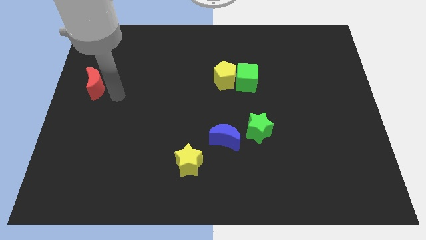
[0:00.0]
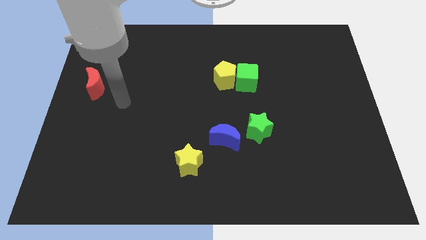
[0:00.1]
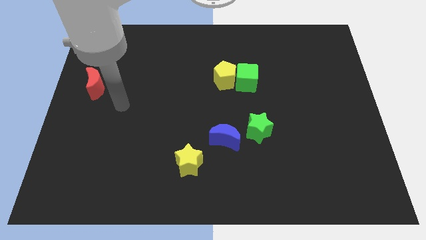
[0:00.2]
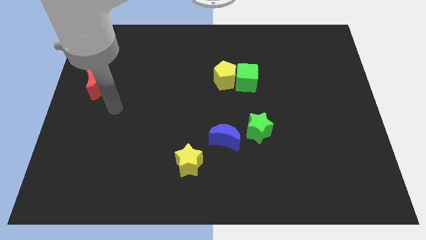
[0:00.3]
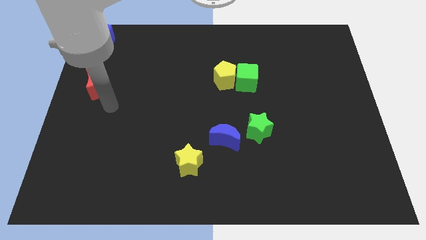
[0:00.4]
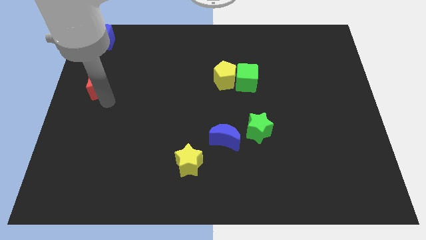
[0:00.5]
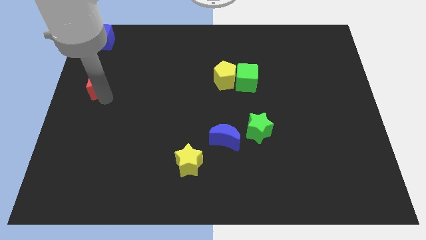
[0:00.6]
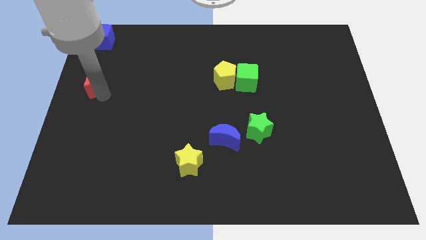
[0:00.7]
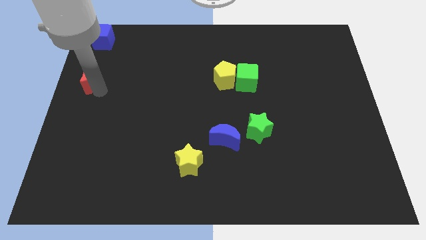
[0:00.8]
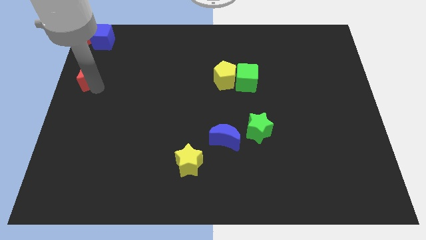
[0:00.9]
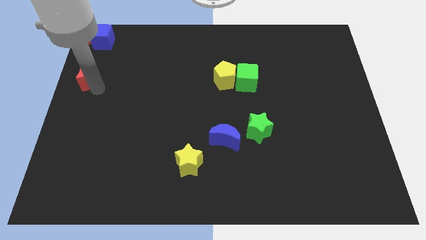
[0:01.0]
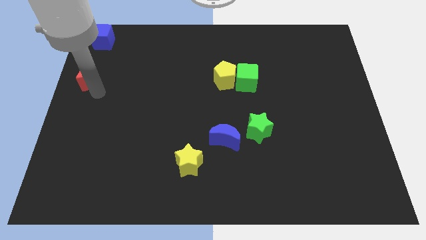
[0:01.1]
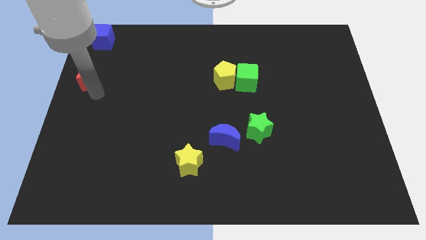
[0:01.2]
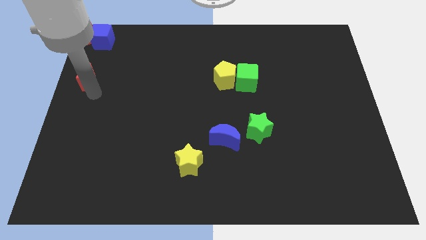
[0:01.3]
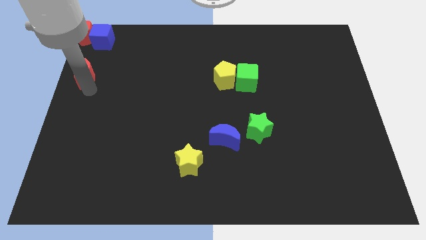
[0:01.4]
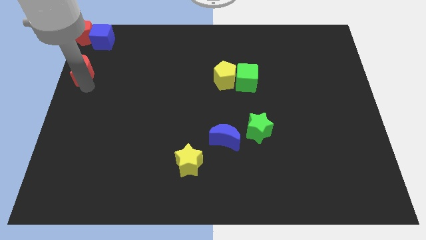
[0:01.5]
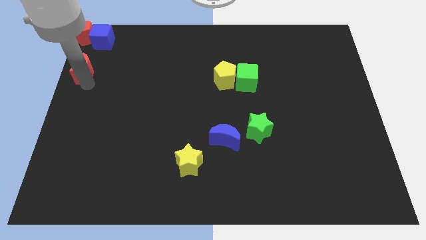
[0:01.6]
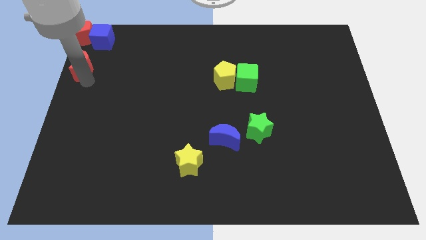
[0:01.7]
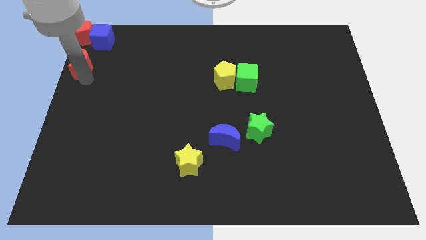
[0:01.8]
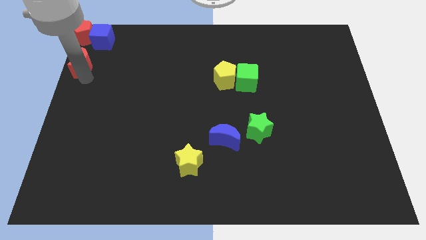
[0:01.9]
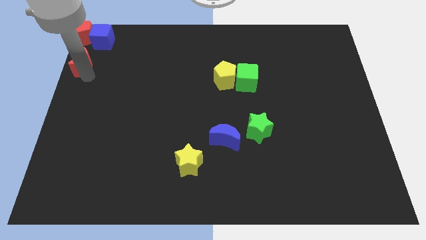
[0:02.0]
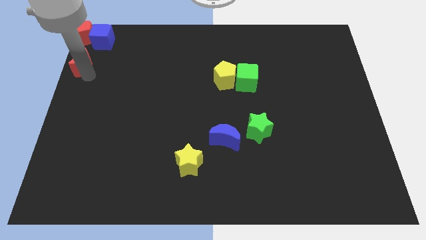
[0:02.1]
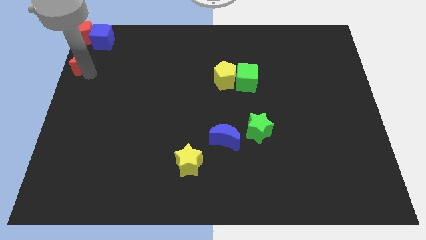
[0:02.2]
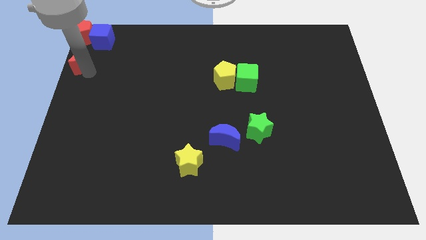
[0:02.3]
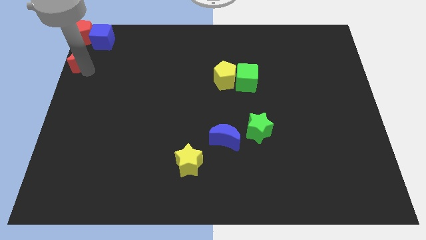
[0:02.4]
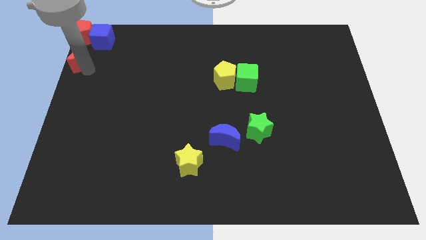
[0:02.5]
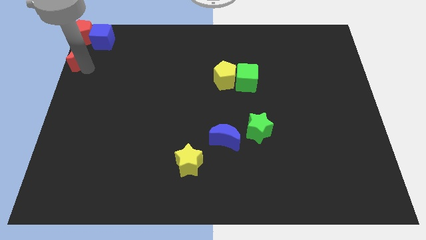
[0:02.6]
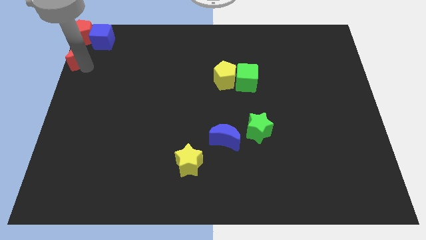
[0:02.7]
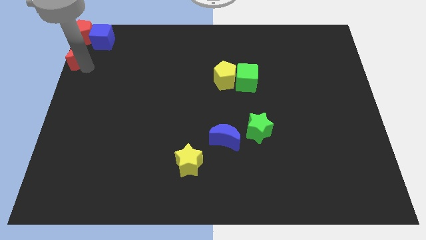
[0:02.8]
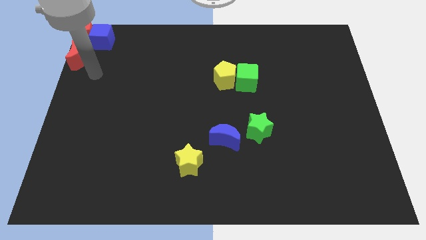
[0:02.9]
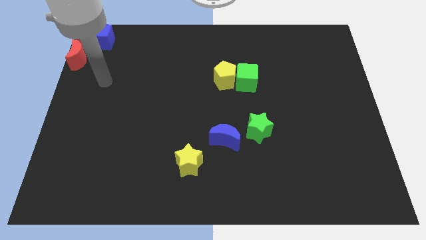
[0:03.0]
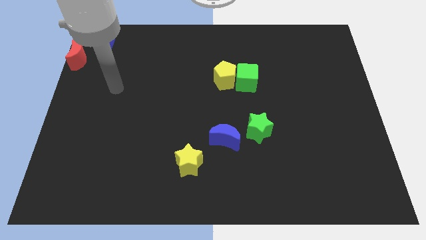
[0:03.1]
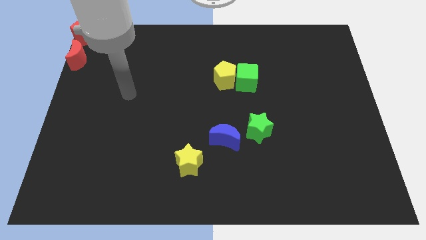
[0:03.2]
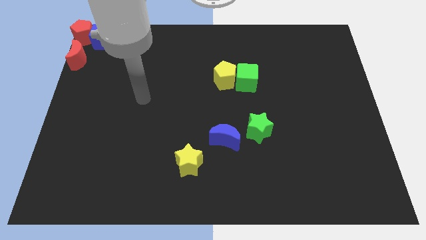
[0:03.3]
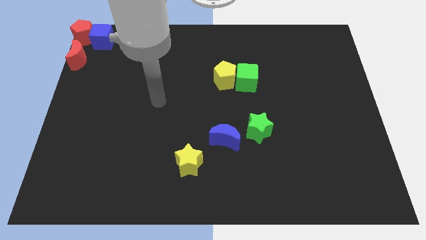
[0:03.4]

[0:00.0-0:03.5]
move the red moon below the red pentagon

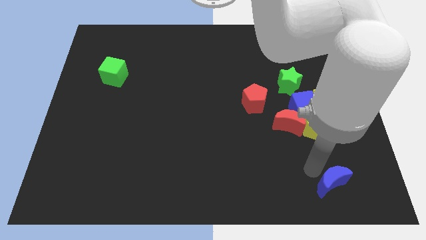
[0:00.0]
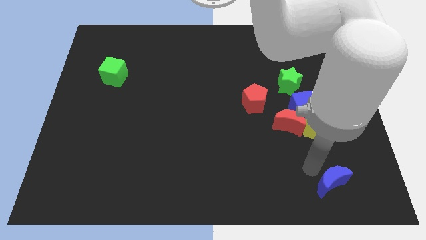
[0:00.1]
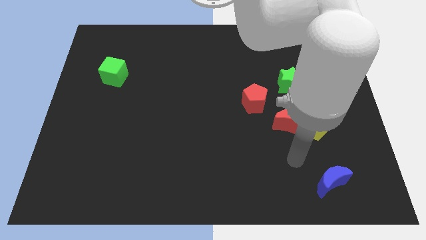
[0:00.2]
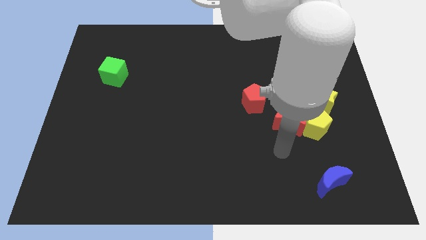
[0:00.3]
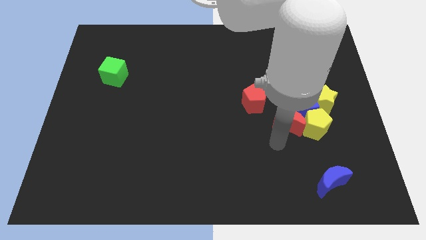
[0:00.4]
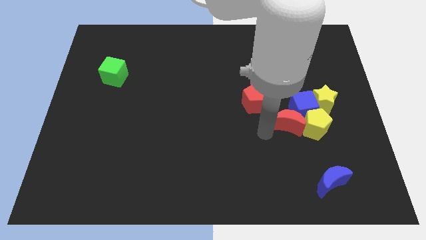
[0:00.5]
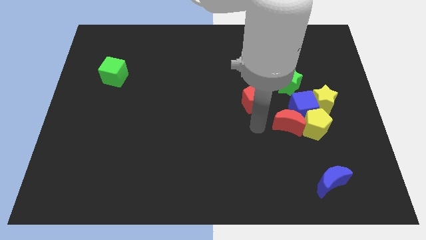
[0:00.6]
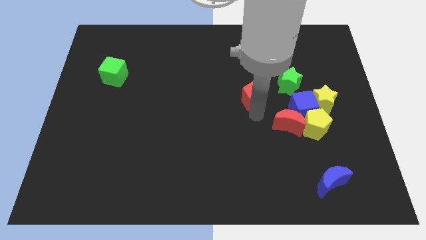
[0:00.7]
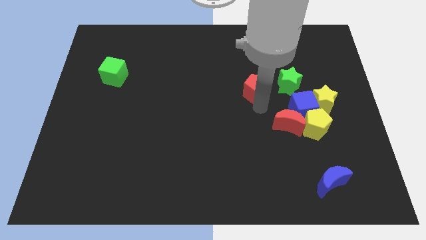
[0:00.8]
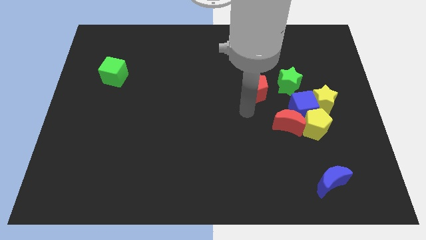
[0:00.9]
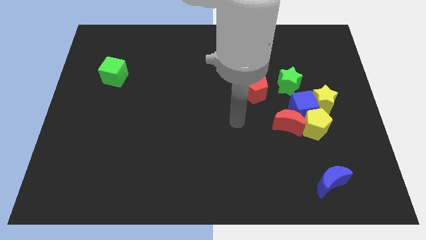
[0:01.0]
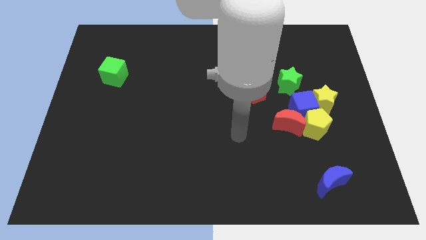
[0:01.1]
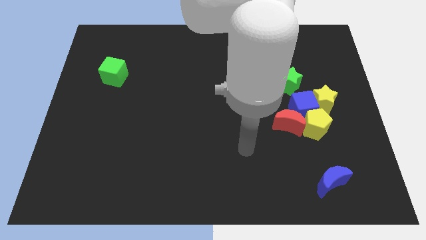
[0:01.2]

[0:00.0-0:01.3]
push red pentagon left to the green star

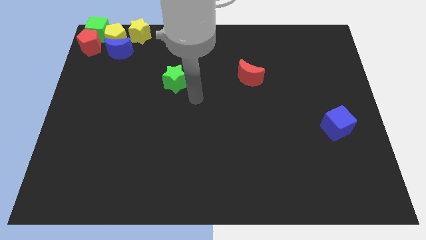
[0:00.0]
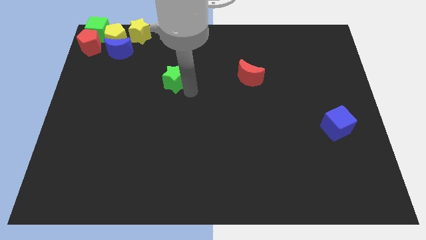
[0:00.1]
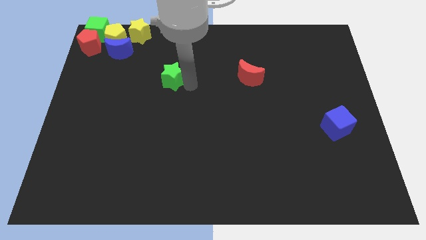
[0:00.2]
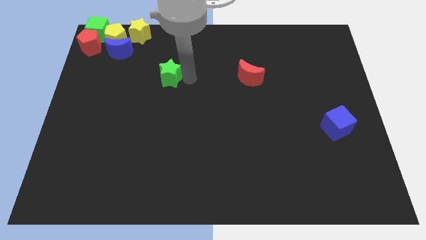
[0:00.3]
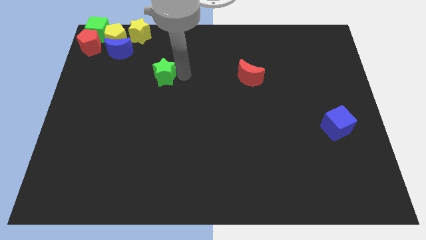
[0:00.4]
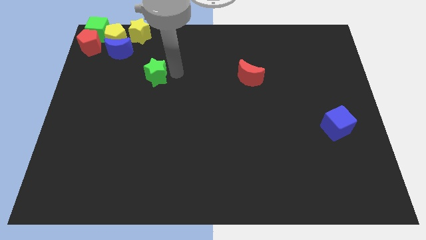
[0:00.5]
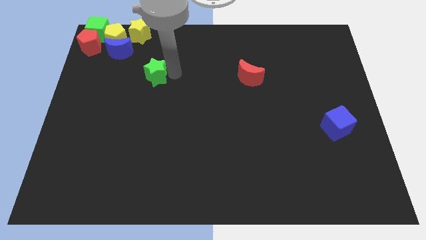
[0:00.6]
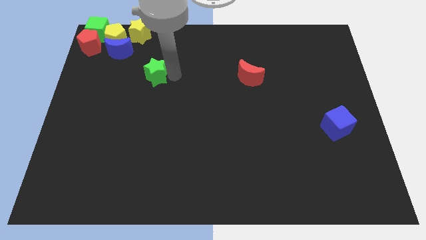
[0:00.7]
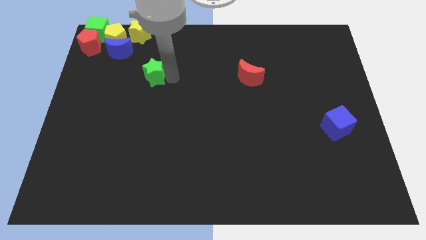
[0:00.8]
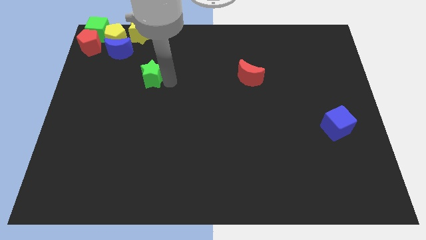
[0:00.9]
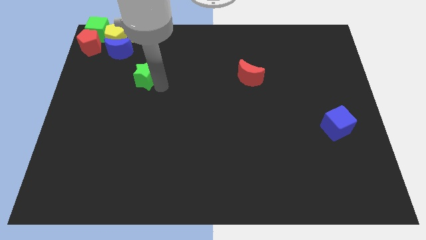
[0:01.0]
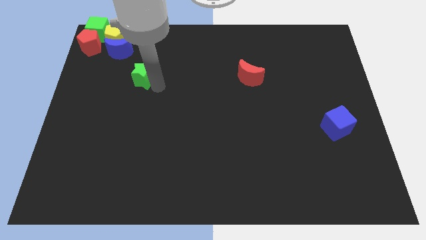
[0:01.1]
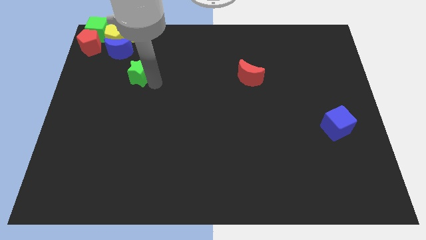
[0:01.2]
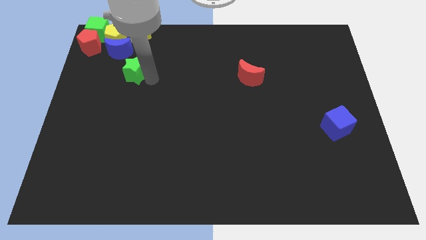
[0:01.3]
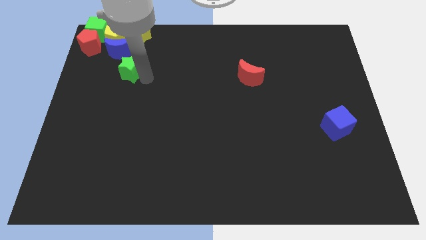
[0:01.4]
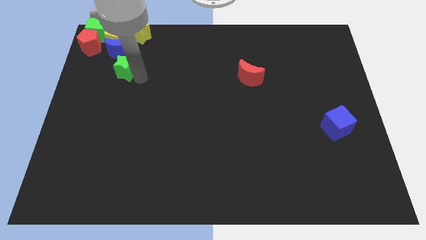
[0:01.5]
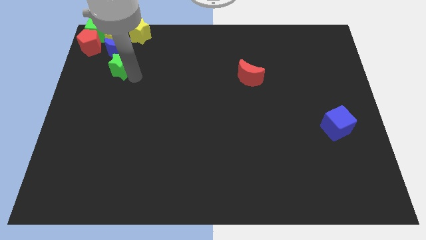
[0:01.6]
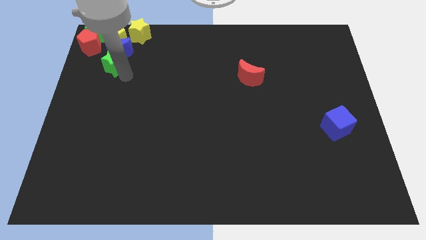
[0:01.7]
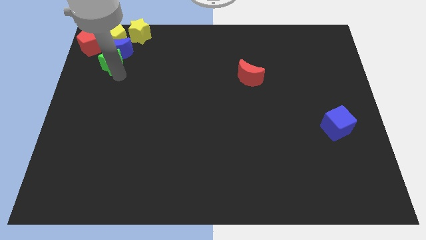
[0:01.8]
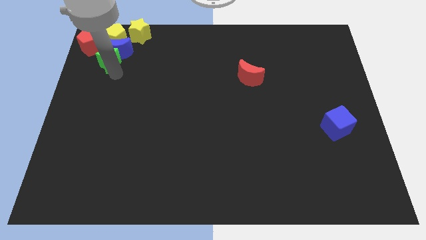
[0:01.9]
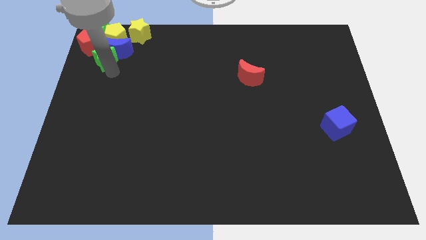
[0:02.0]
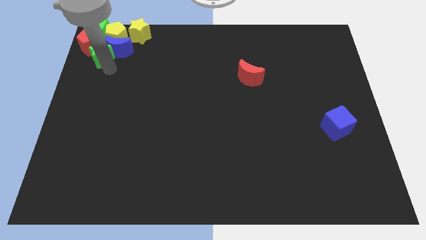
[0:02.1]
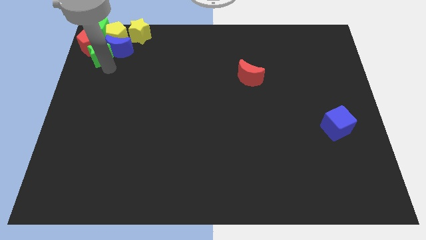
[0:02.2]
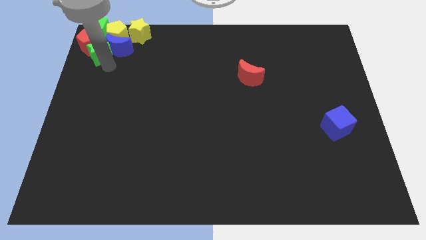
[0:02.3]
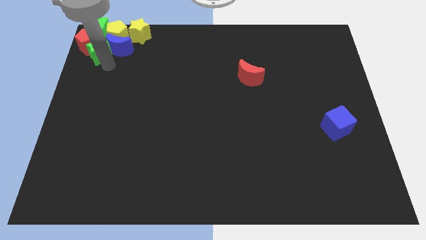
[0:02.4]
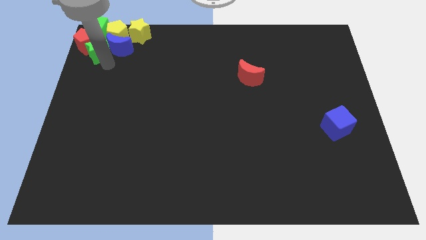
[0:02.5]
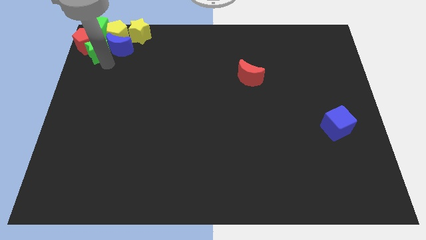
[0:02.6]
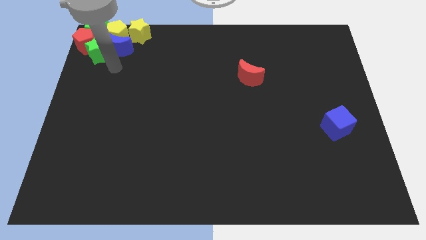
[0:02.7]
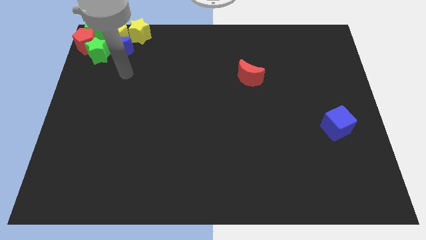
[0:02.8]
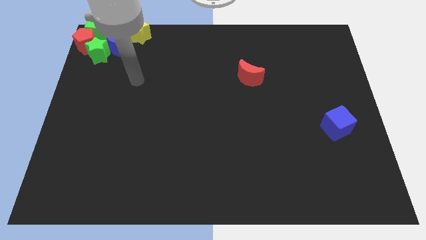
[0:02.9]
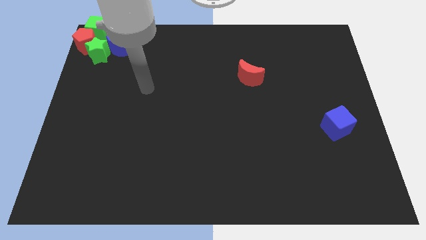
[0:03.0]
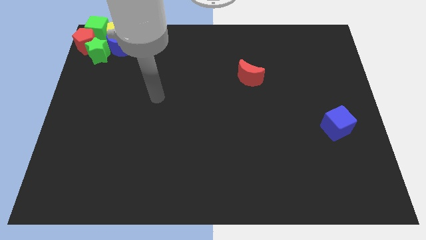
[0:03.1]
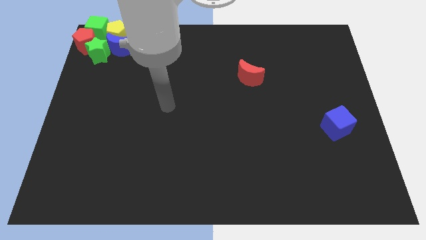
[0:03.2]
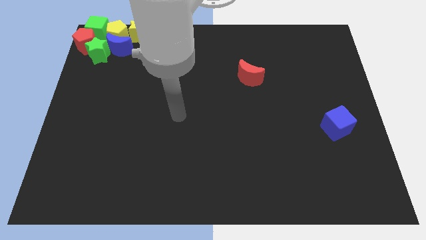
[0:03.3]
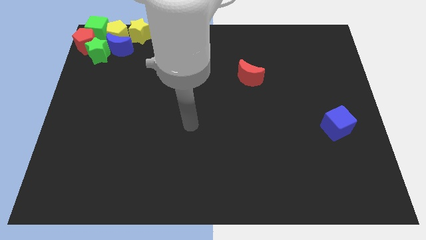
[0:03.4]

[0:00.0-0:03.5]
move green star right below the blue moon

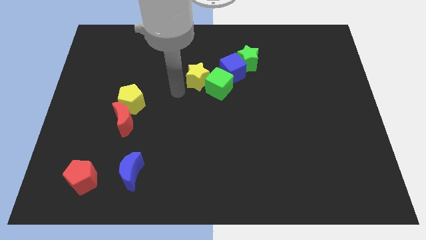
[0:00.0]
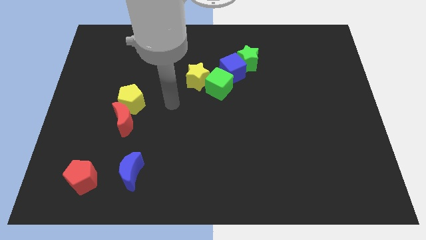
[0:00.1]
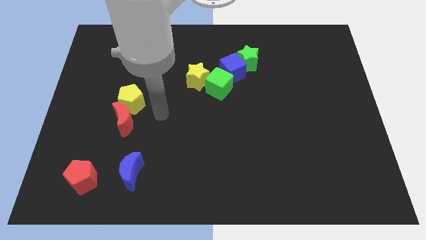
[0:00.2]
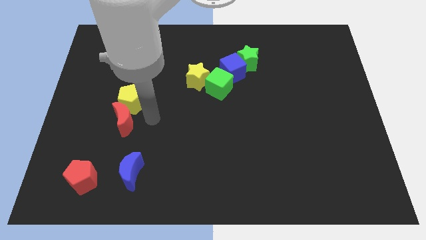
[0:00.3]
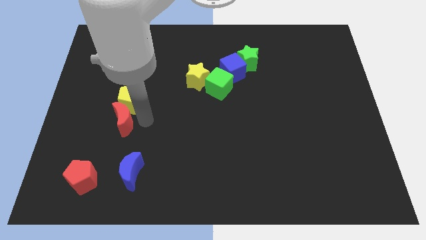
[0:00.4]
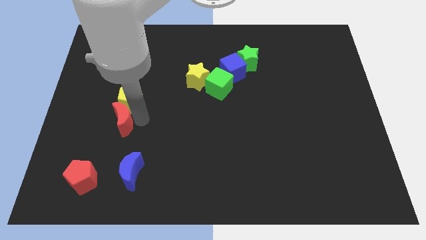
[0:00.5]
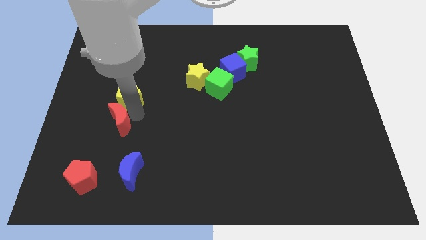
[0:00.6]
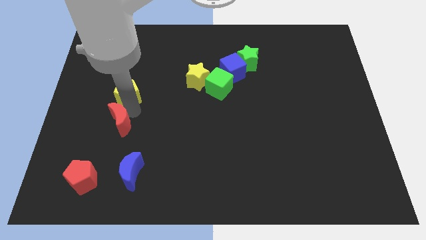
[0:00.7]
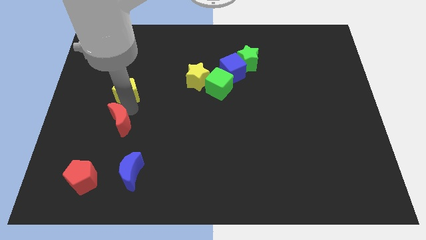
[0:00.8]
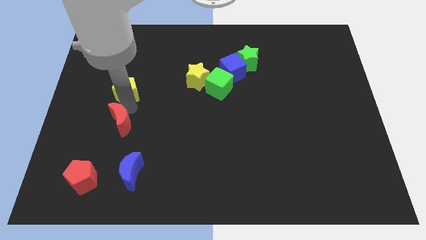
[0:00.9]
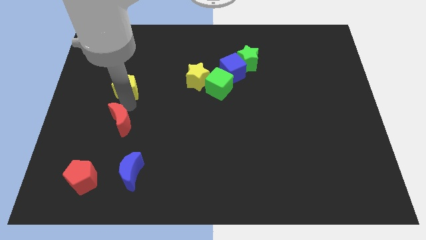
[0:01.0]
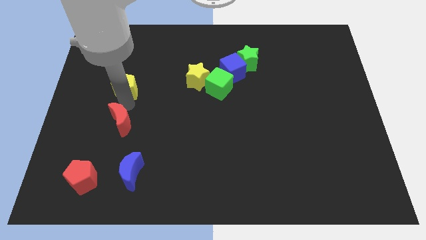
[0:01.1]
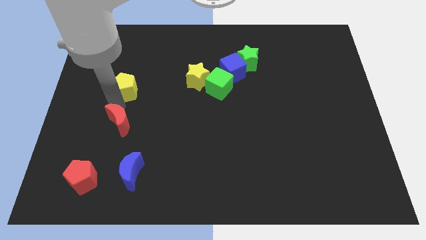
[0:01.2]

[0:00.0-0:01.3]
move the yellow pentagon slightly to the top of the red moon
